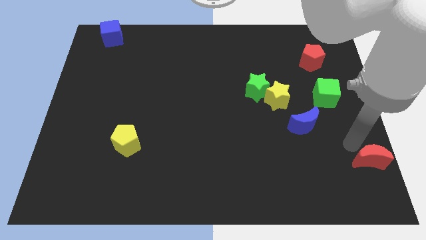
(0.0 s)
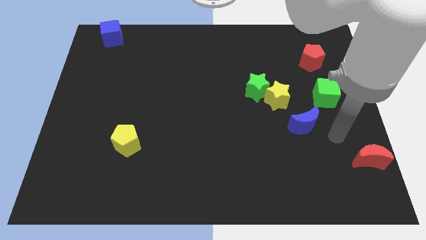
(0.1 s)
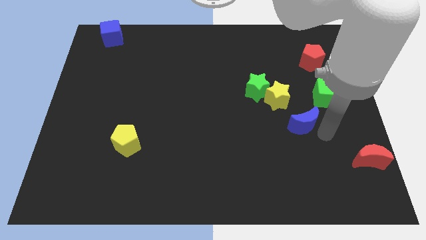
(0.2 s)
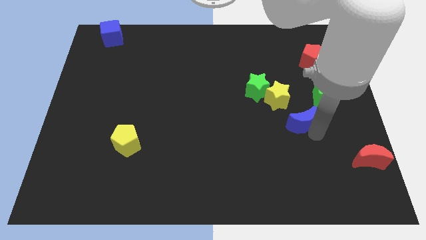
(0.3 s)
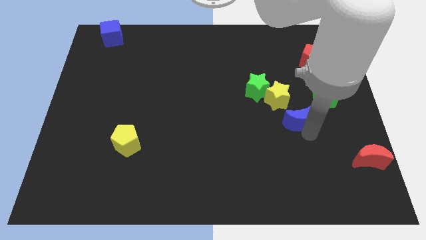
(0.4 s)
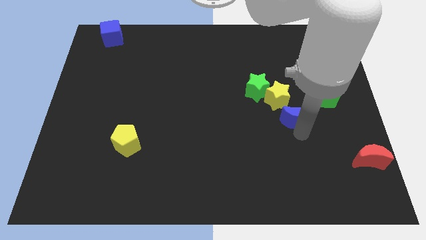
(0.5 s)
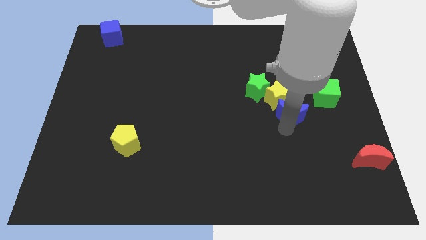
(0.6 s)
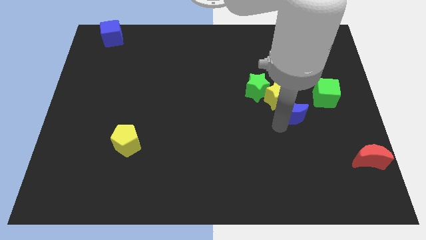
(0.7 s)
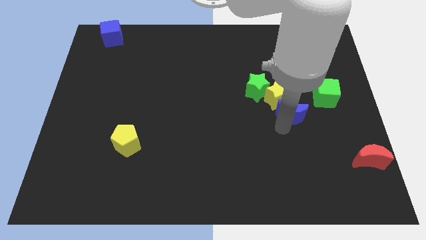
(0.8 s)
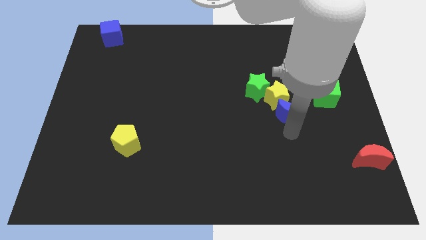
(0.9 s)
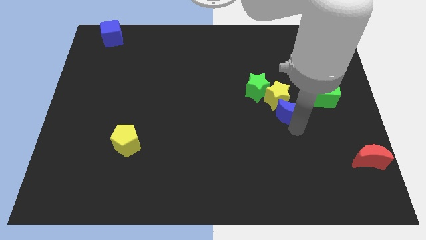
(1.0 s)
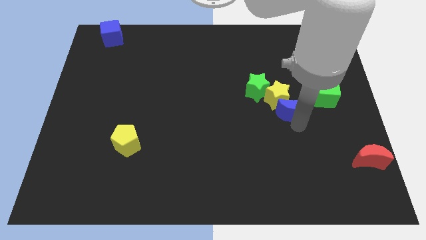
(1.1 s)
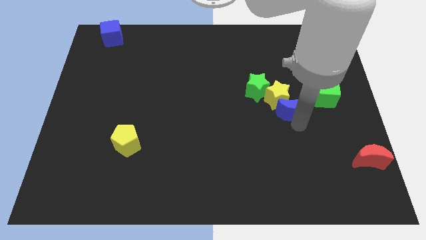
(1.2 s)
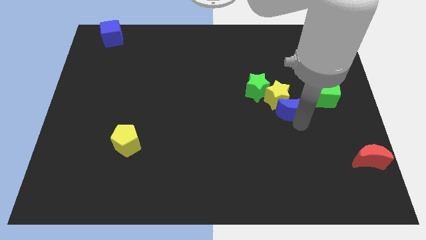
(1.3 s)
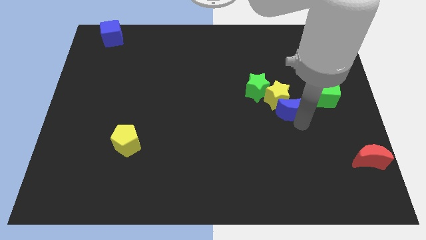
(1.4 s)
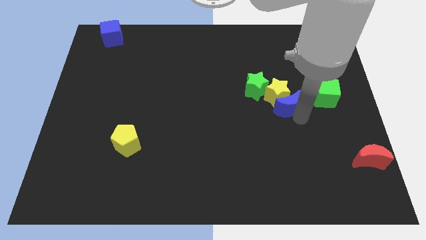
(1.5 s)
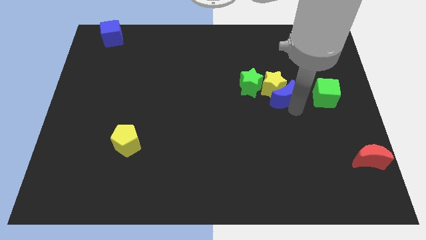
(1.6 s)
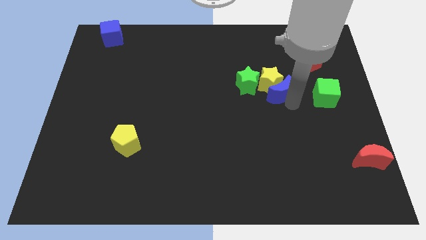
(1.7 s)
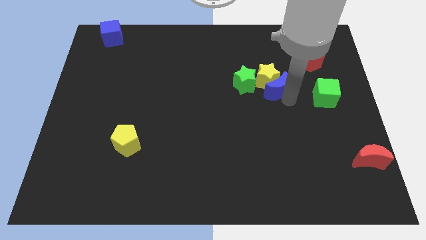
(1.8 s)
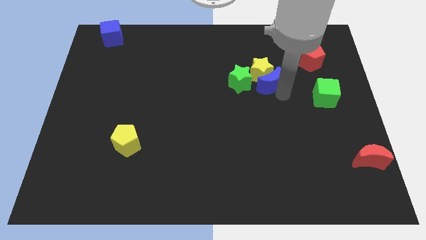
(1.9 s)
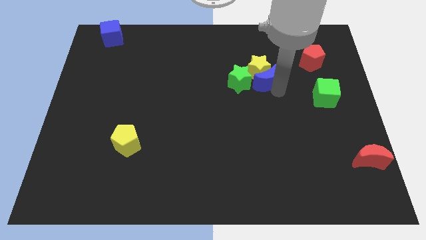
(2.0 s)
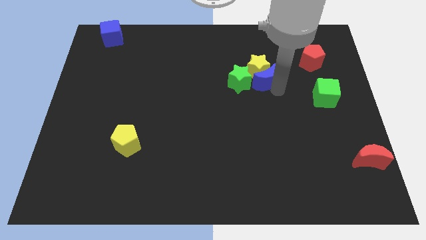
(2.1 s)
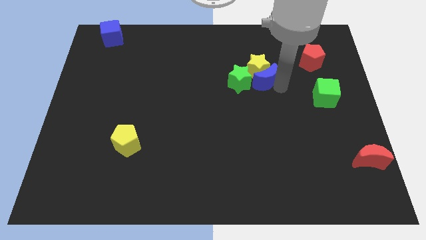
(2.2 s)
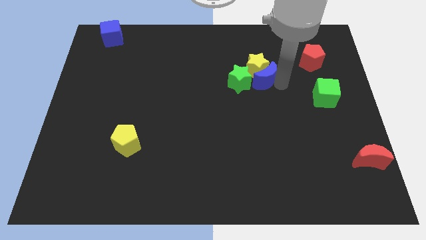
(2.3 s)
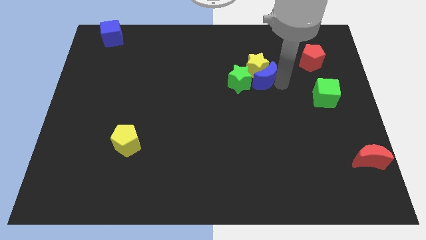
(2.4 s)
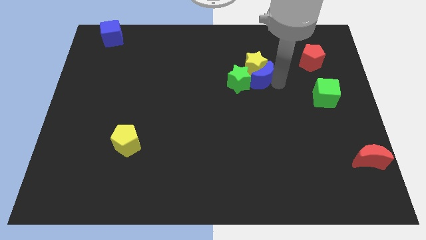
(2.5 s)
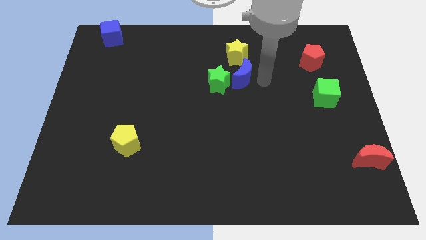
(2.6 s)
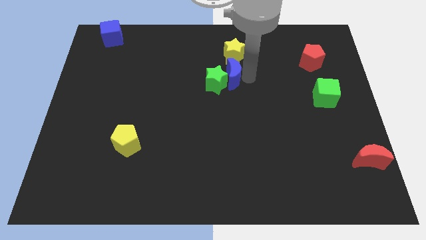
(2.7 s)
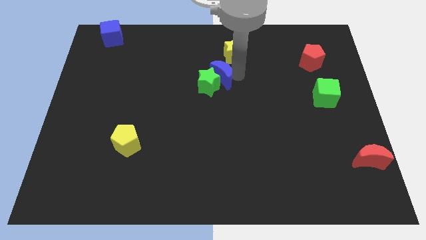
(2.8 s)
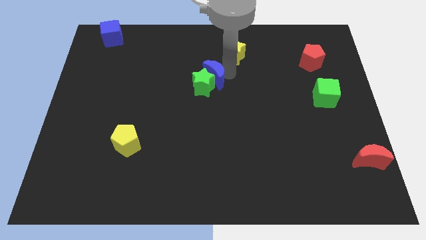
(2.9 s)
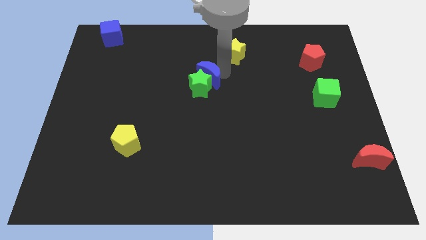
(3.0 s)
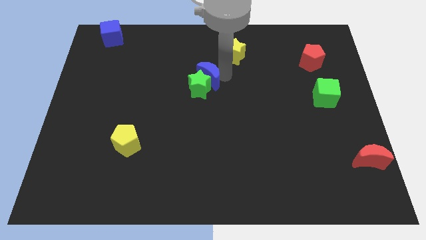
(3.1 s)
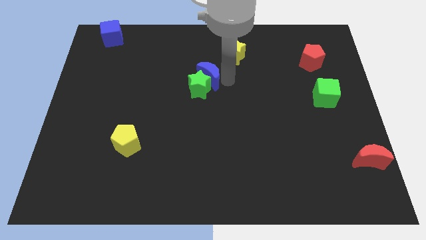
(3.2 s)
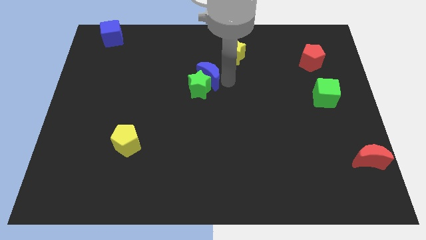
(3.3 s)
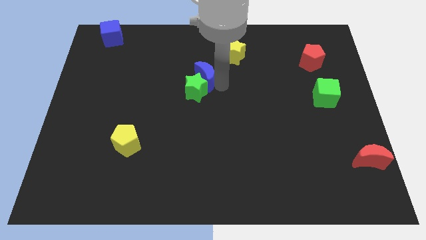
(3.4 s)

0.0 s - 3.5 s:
push blue moon in to the green star

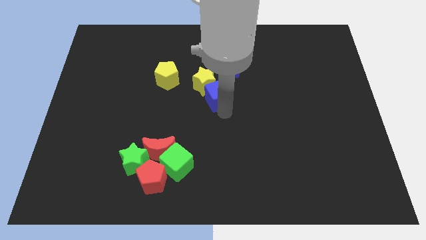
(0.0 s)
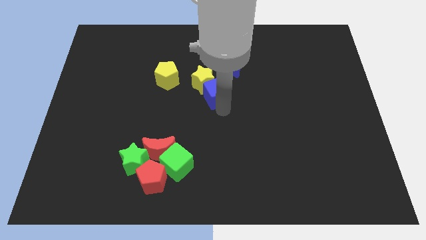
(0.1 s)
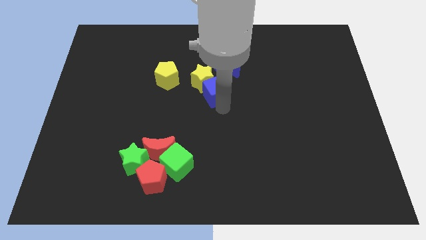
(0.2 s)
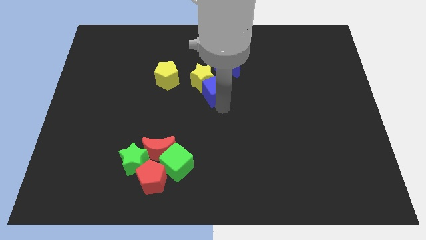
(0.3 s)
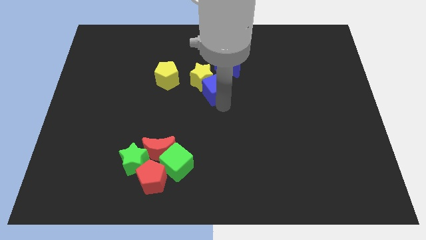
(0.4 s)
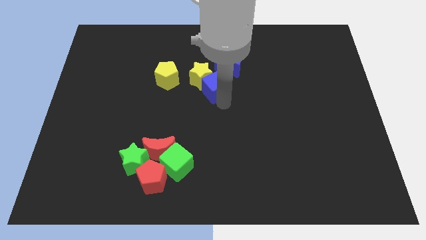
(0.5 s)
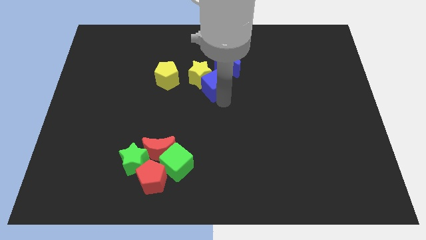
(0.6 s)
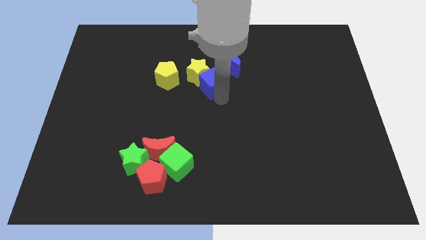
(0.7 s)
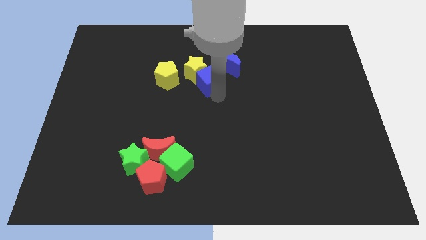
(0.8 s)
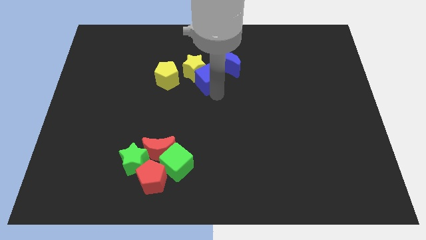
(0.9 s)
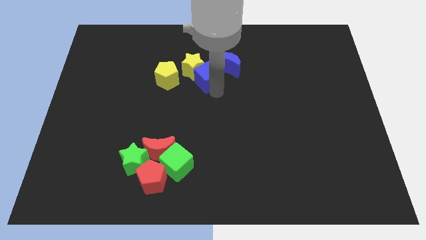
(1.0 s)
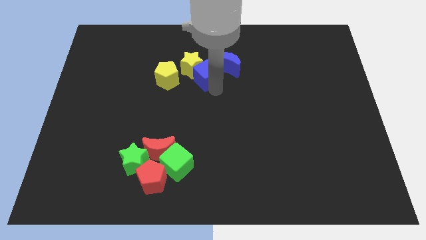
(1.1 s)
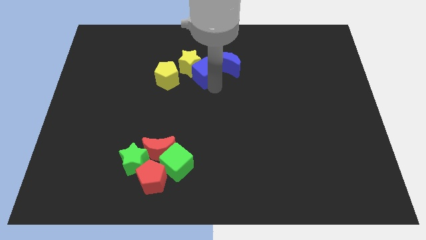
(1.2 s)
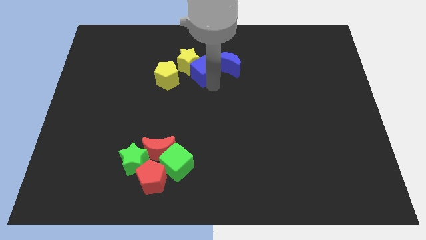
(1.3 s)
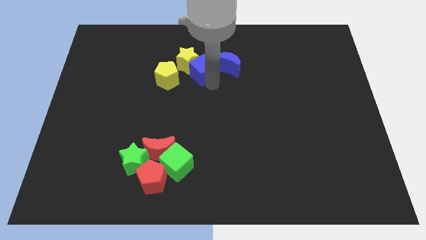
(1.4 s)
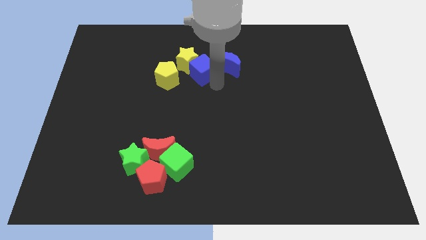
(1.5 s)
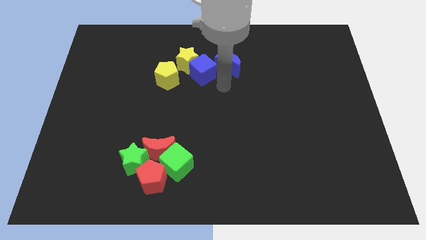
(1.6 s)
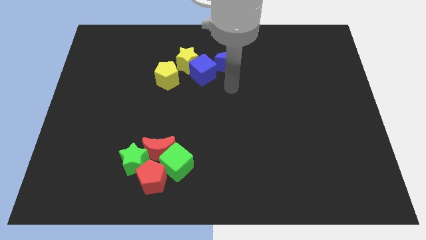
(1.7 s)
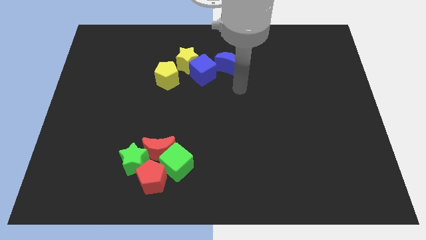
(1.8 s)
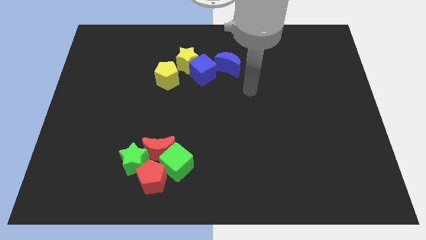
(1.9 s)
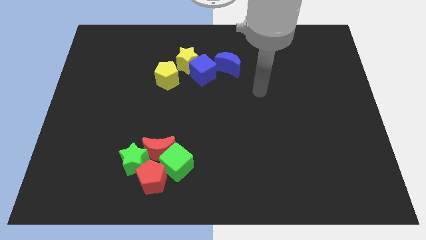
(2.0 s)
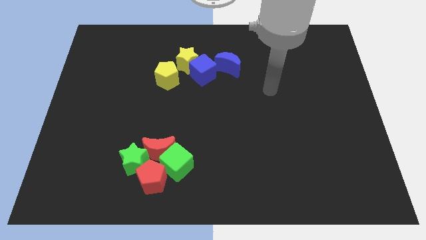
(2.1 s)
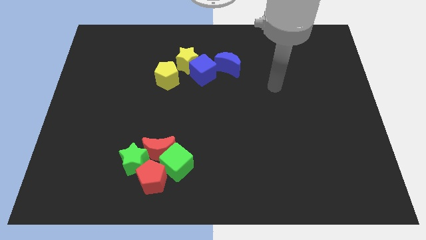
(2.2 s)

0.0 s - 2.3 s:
push the blue cube and yellow star towards top side

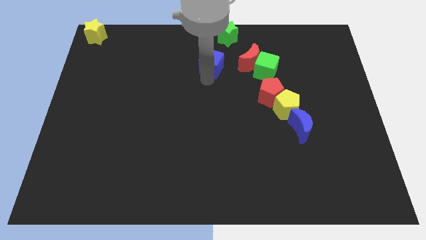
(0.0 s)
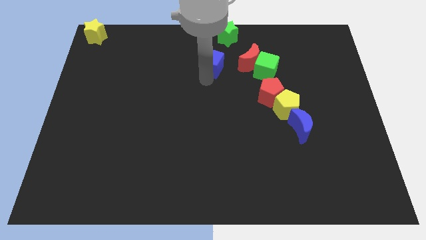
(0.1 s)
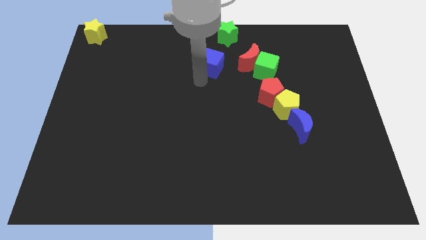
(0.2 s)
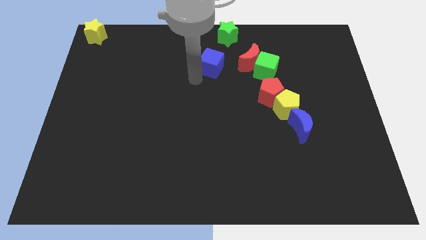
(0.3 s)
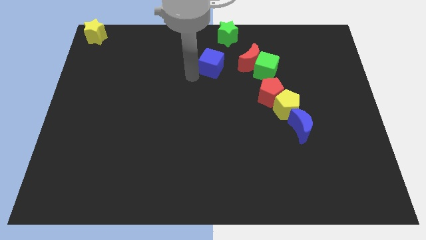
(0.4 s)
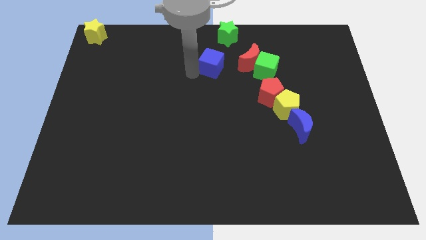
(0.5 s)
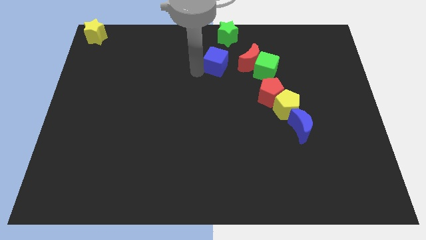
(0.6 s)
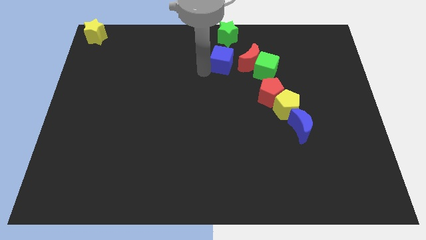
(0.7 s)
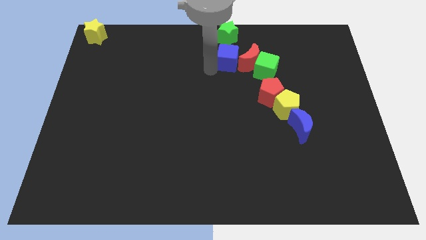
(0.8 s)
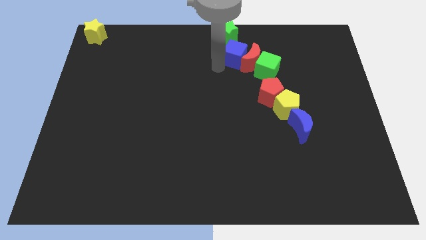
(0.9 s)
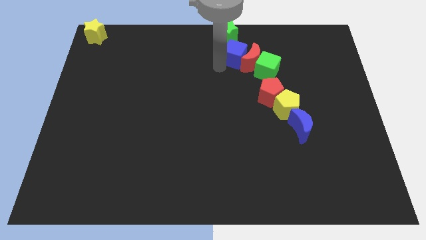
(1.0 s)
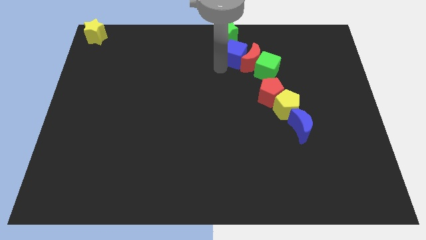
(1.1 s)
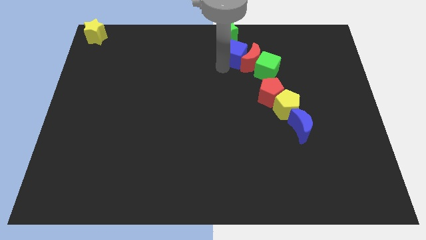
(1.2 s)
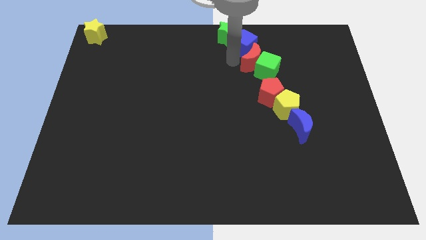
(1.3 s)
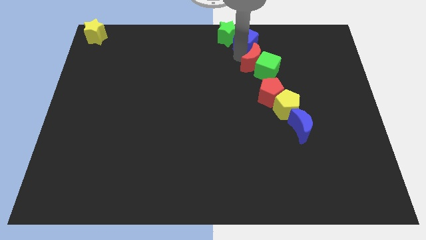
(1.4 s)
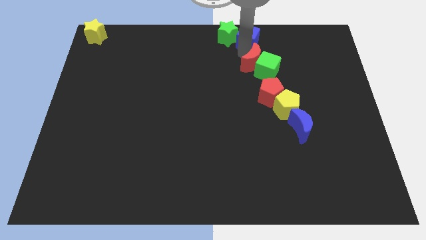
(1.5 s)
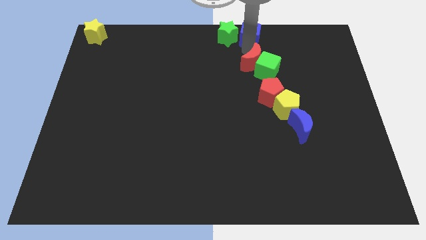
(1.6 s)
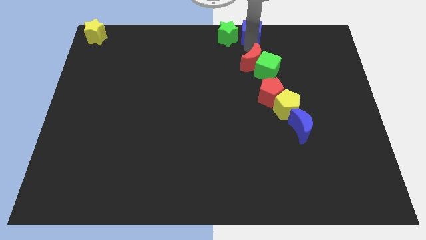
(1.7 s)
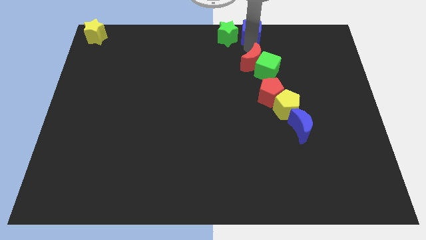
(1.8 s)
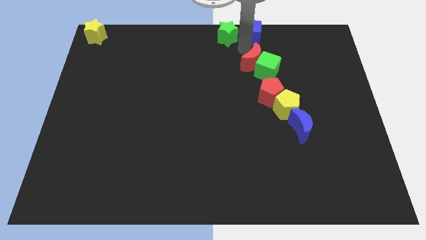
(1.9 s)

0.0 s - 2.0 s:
place the blue cube right to the green star

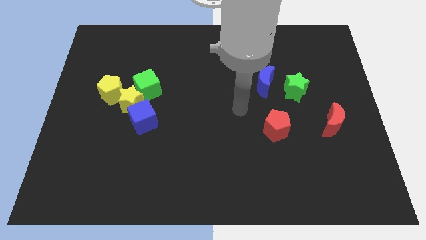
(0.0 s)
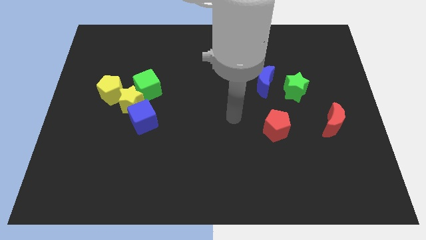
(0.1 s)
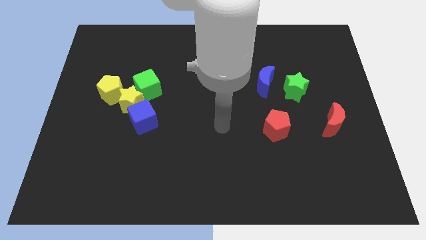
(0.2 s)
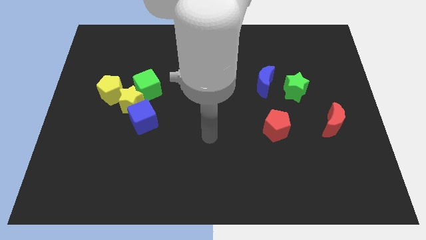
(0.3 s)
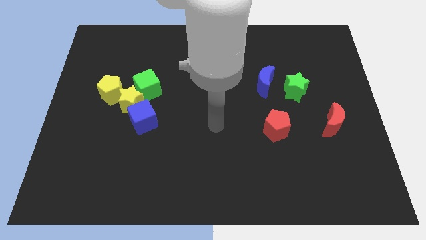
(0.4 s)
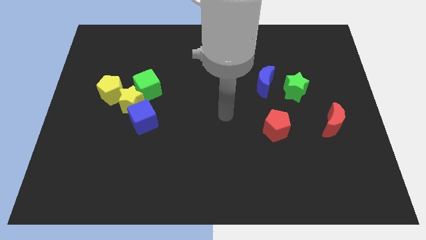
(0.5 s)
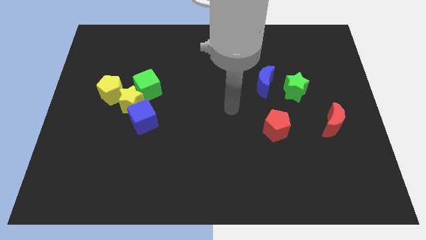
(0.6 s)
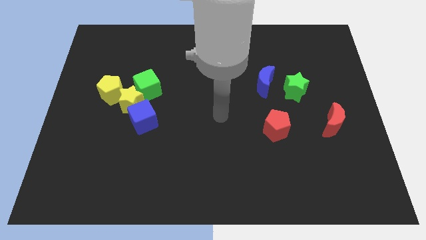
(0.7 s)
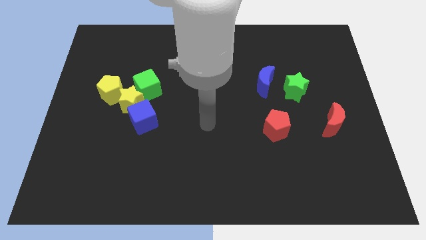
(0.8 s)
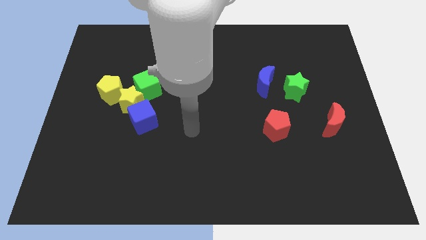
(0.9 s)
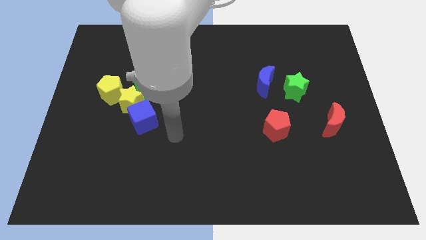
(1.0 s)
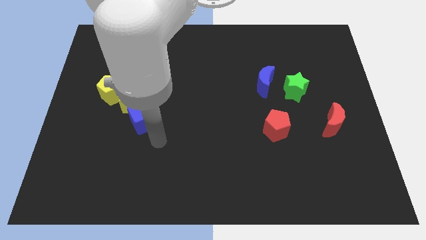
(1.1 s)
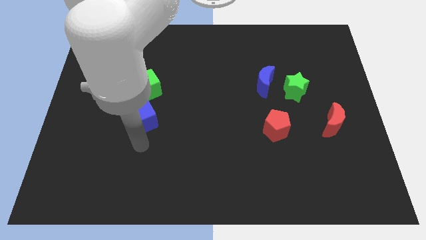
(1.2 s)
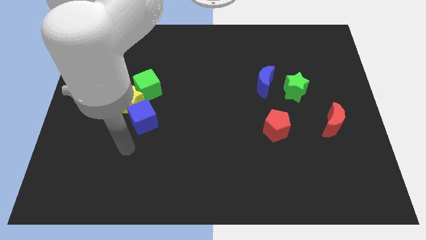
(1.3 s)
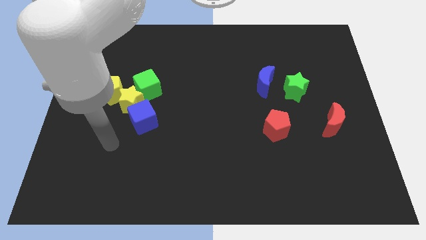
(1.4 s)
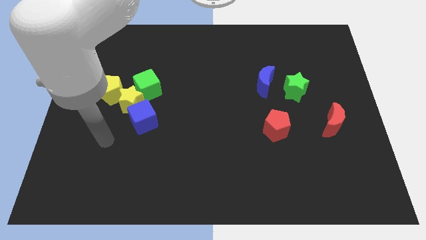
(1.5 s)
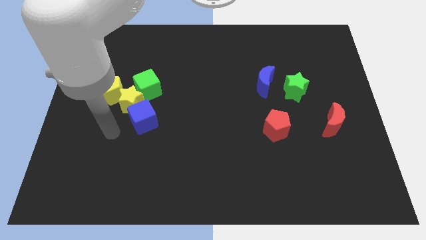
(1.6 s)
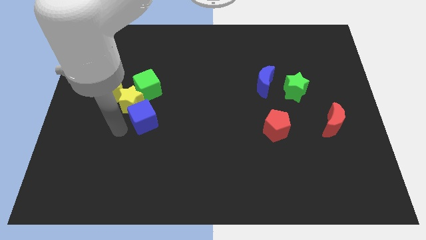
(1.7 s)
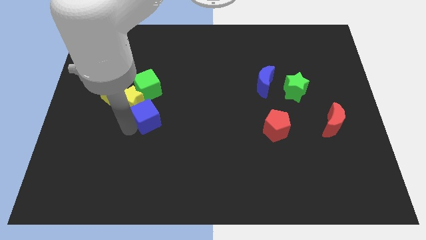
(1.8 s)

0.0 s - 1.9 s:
place your hand to the left of the blue cube
